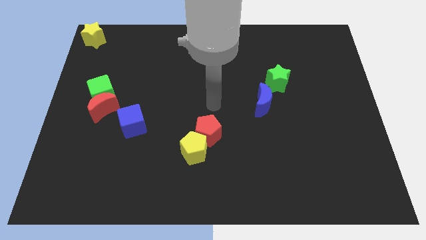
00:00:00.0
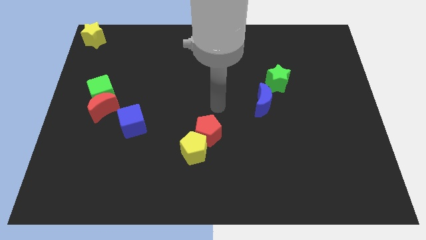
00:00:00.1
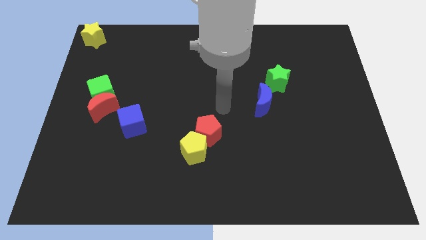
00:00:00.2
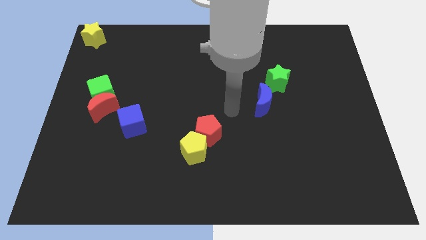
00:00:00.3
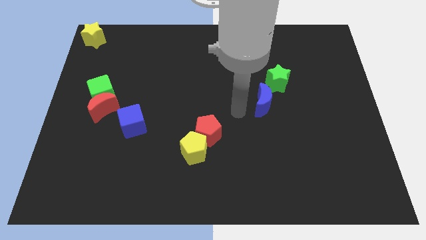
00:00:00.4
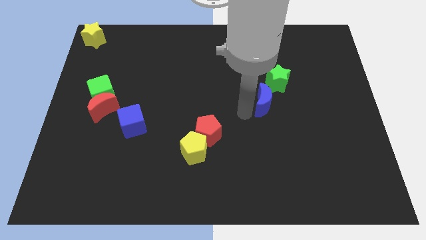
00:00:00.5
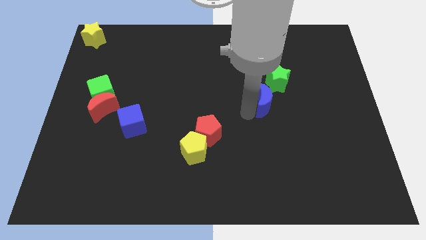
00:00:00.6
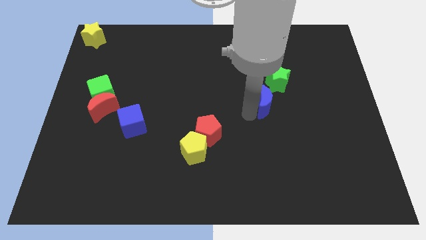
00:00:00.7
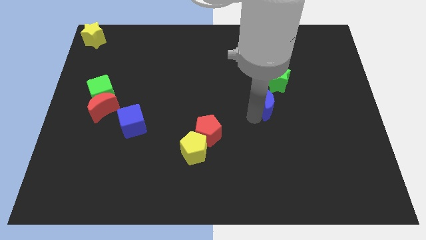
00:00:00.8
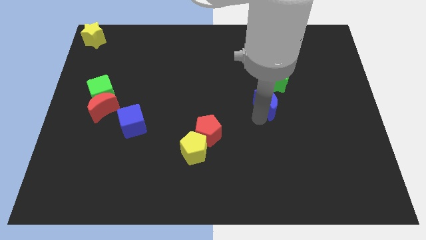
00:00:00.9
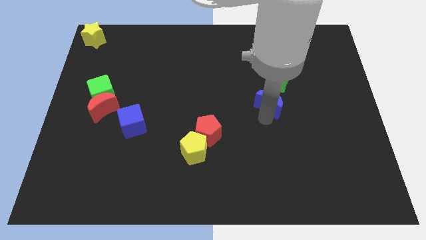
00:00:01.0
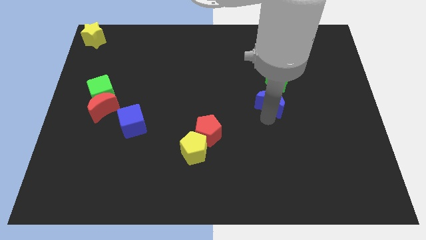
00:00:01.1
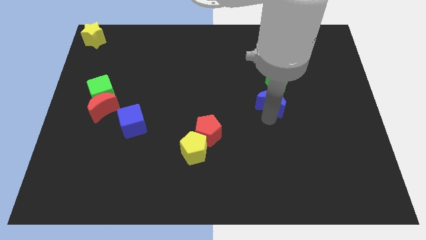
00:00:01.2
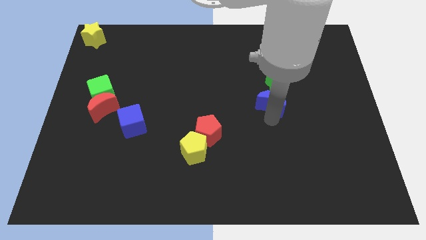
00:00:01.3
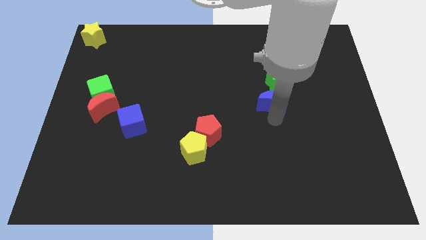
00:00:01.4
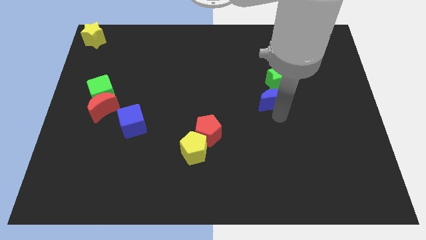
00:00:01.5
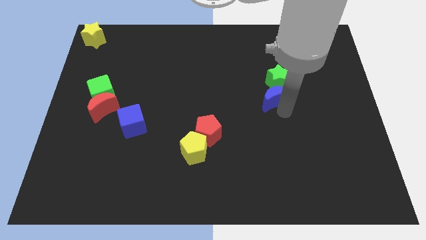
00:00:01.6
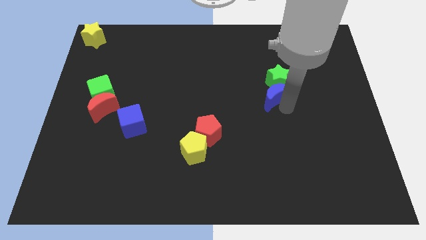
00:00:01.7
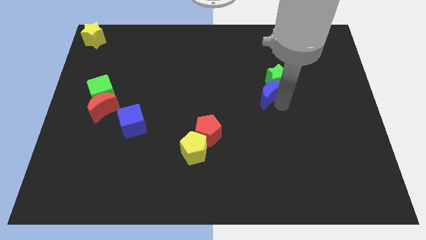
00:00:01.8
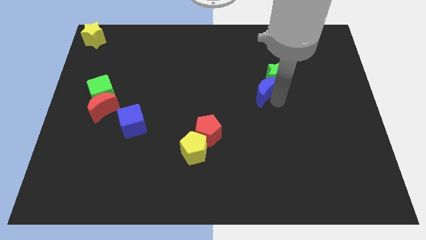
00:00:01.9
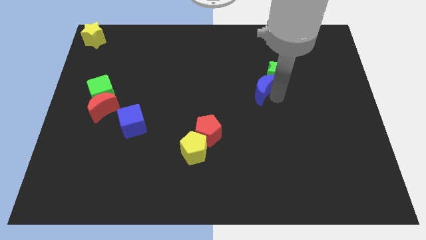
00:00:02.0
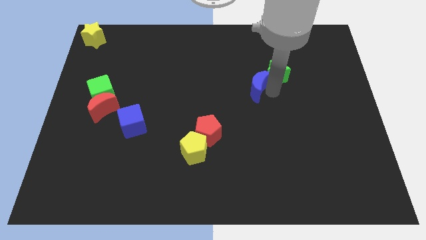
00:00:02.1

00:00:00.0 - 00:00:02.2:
move the blue crescent into the green star

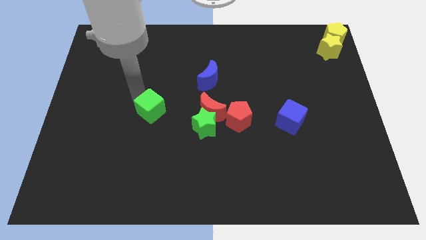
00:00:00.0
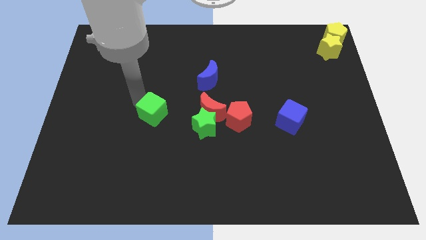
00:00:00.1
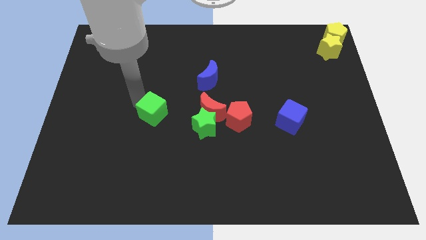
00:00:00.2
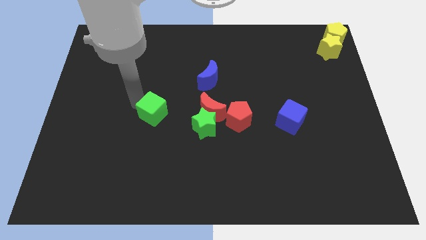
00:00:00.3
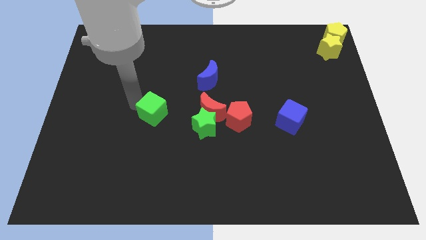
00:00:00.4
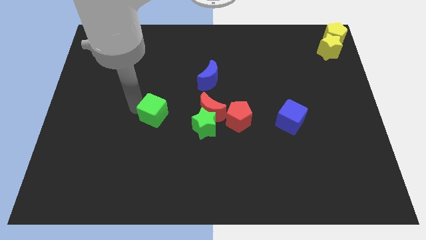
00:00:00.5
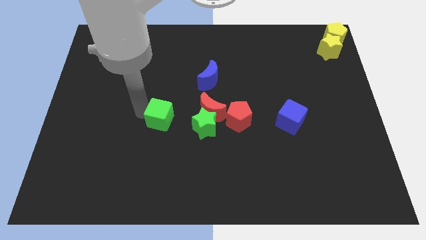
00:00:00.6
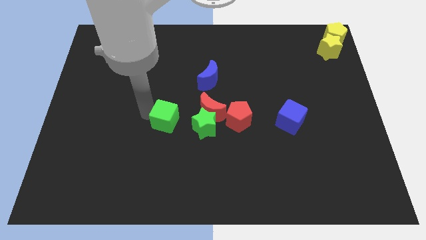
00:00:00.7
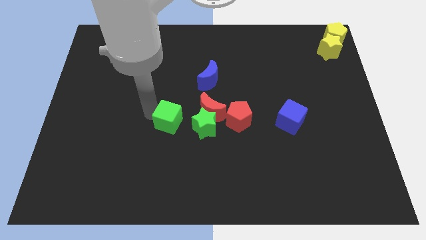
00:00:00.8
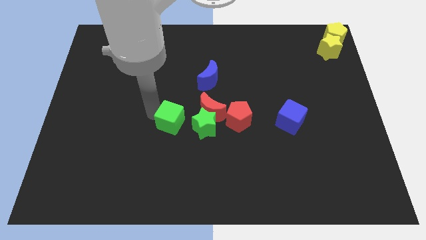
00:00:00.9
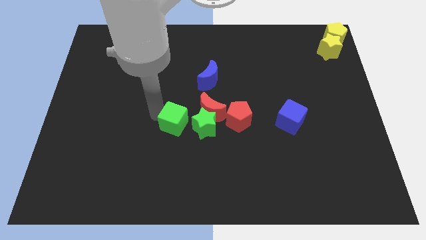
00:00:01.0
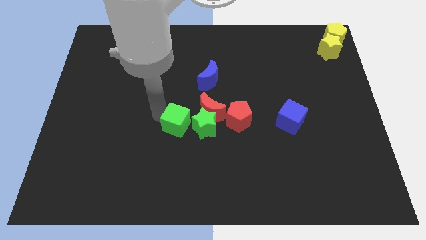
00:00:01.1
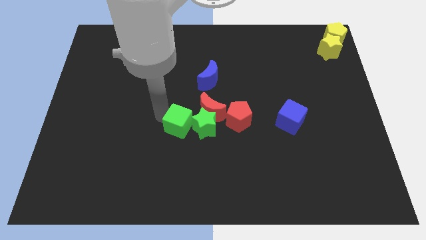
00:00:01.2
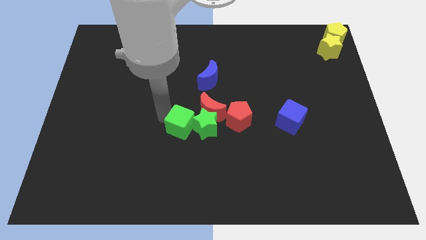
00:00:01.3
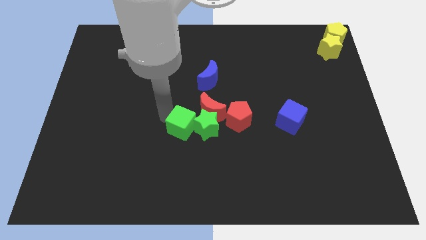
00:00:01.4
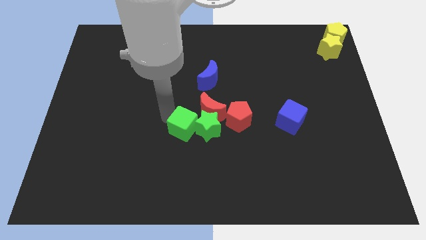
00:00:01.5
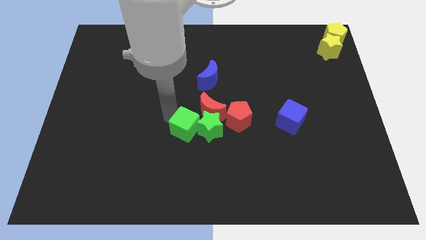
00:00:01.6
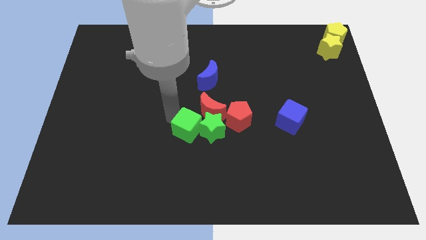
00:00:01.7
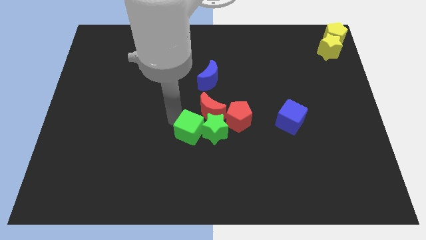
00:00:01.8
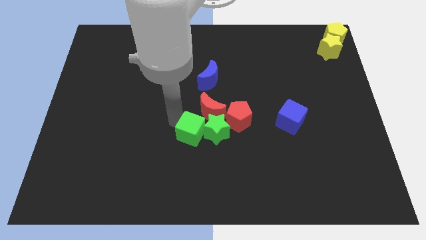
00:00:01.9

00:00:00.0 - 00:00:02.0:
put the green cube at the left side of the green star

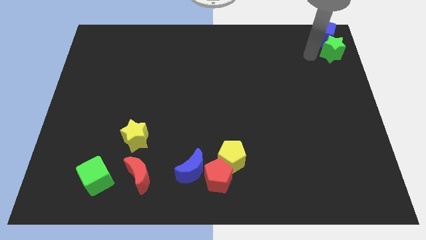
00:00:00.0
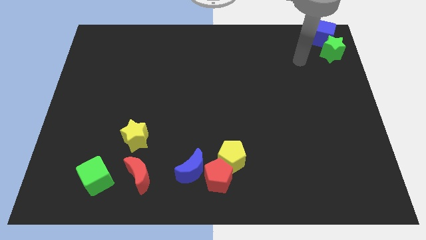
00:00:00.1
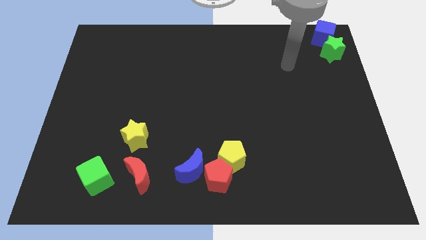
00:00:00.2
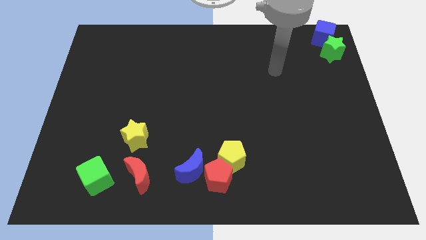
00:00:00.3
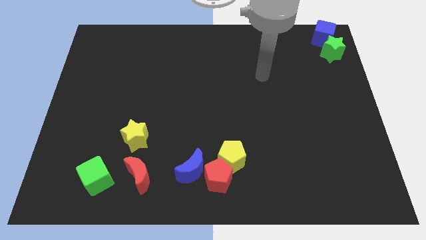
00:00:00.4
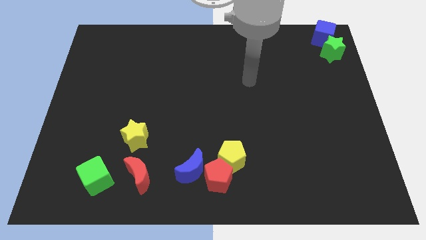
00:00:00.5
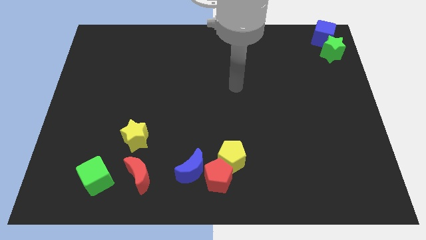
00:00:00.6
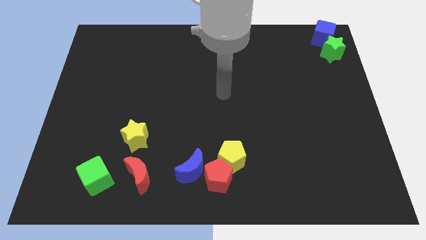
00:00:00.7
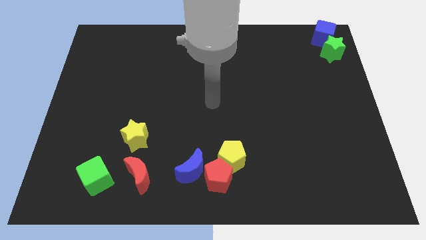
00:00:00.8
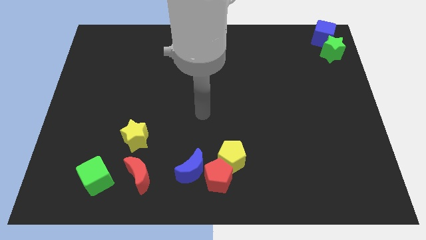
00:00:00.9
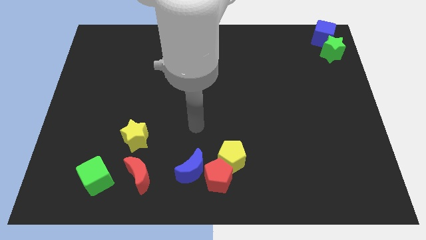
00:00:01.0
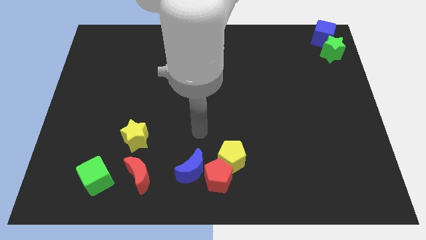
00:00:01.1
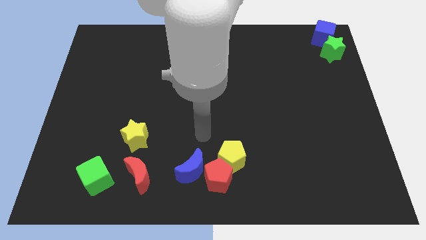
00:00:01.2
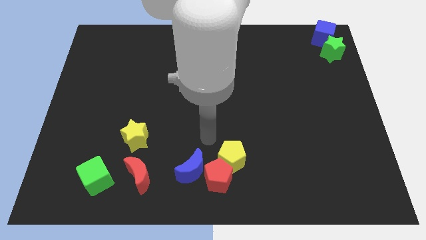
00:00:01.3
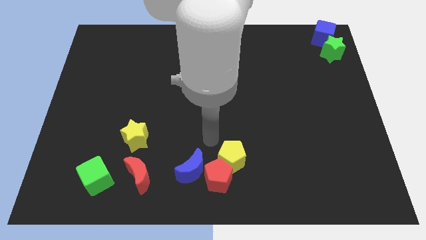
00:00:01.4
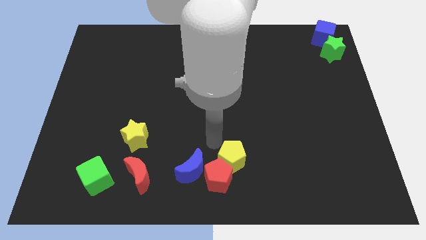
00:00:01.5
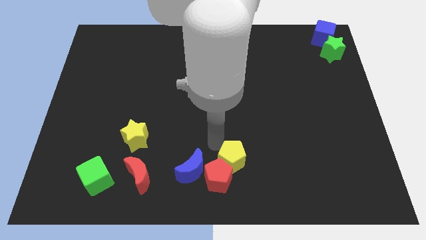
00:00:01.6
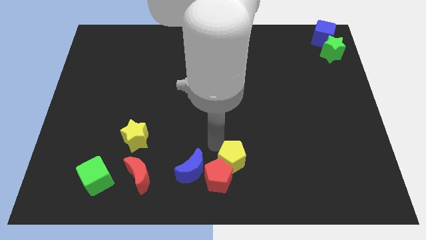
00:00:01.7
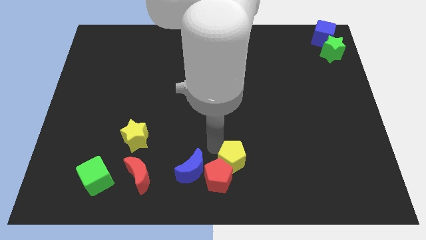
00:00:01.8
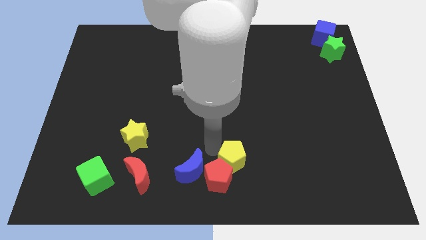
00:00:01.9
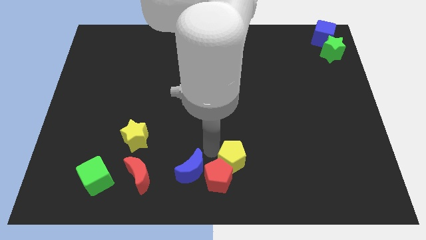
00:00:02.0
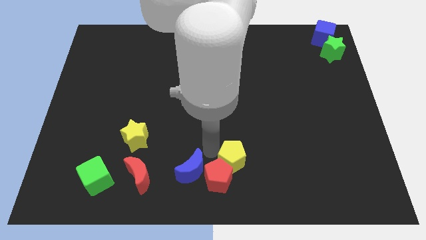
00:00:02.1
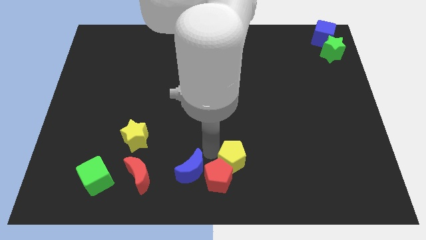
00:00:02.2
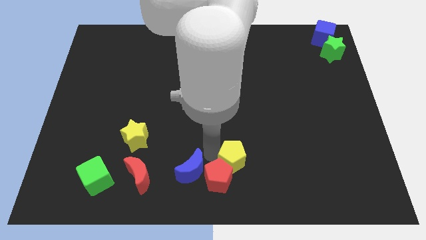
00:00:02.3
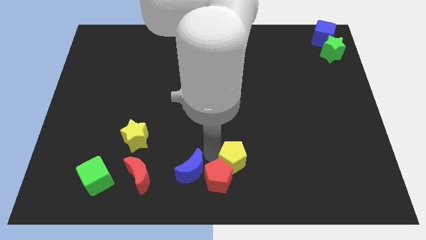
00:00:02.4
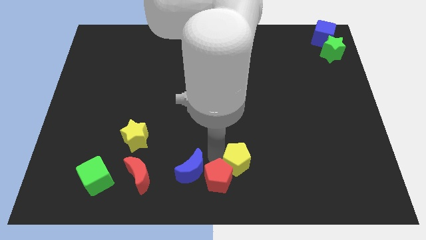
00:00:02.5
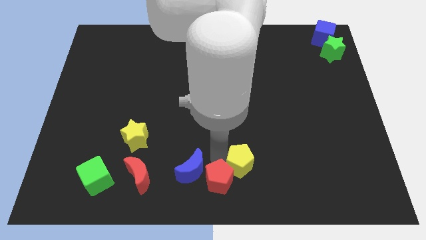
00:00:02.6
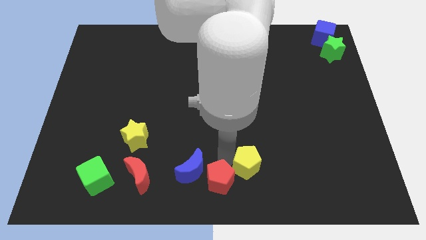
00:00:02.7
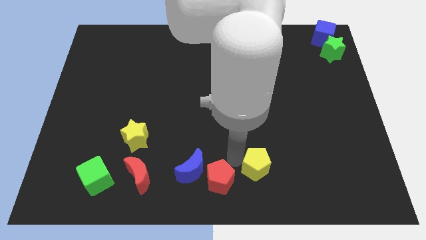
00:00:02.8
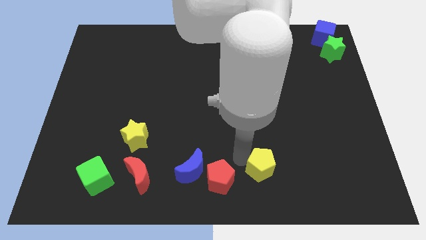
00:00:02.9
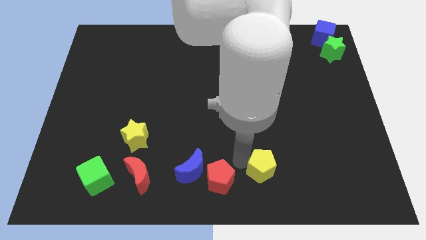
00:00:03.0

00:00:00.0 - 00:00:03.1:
push the yellow pentagon slightly to the right

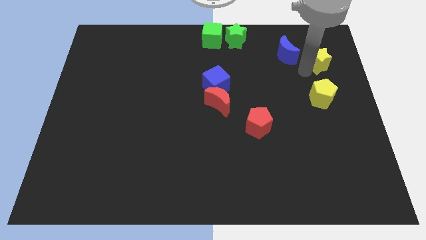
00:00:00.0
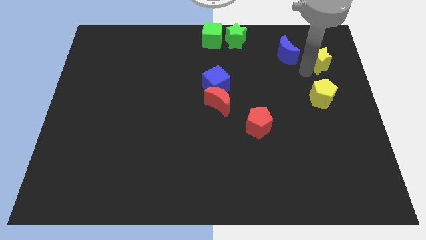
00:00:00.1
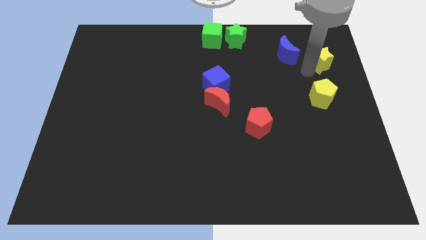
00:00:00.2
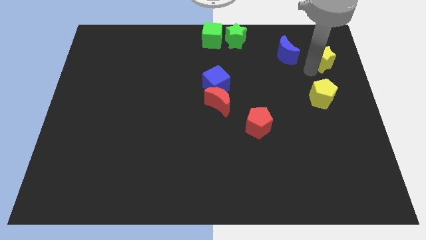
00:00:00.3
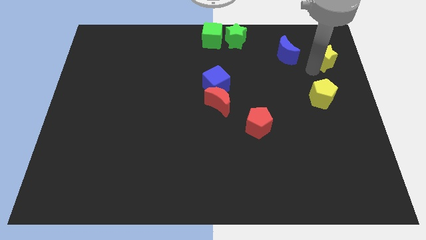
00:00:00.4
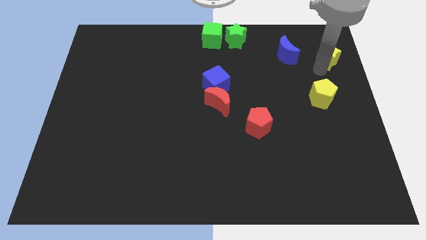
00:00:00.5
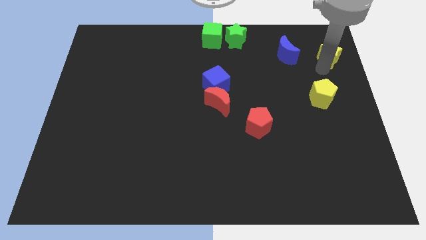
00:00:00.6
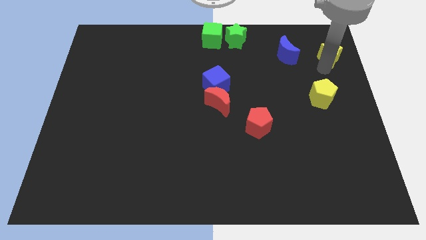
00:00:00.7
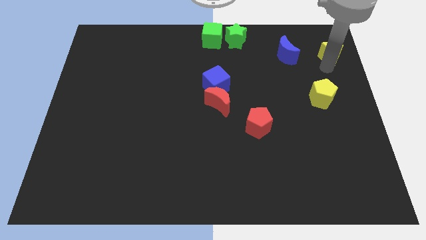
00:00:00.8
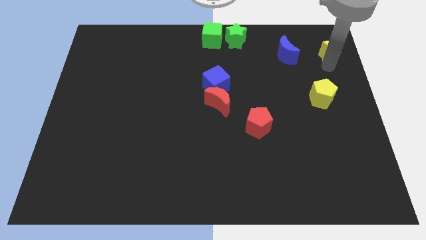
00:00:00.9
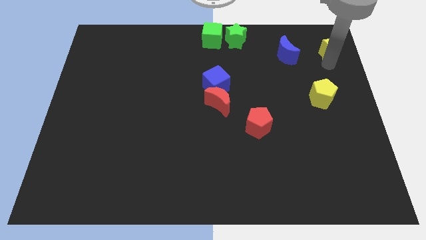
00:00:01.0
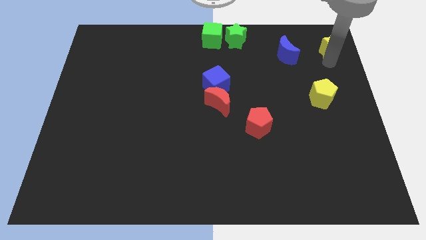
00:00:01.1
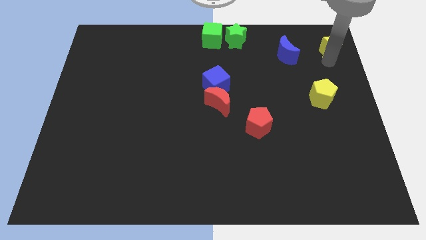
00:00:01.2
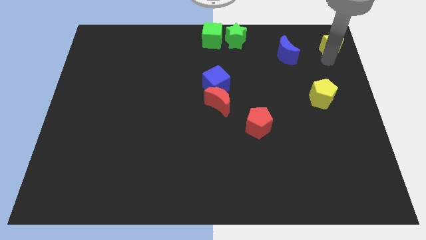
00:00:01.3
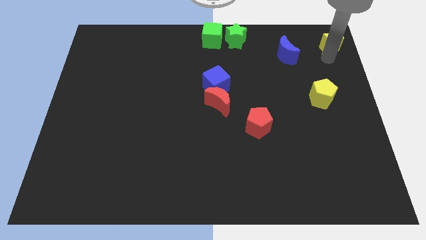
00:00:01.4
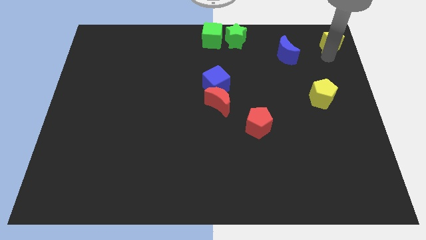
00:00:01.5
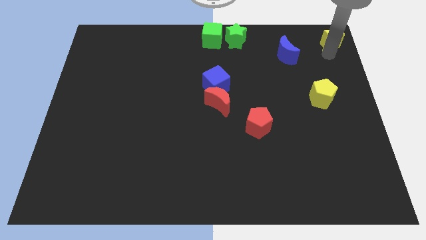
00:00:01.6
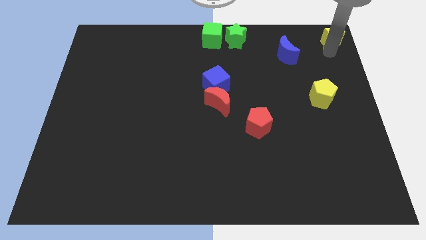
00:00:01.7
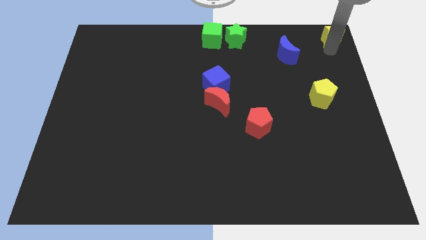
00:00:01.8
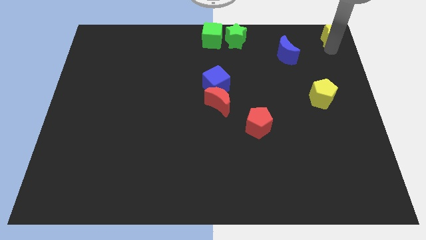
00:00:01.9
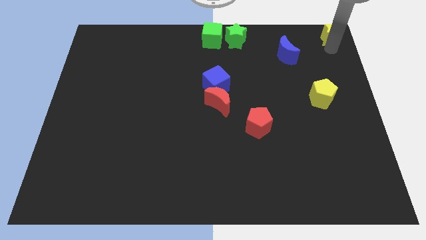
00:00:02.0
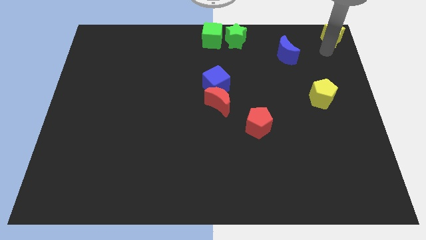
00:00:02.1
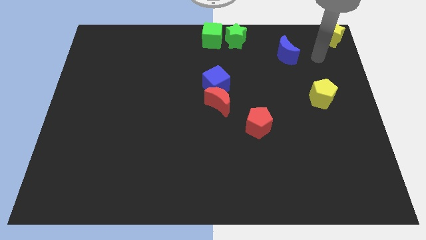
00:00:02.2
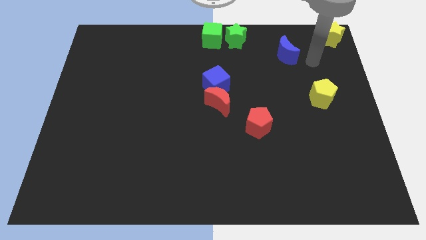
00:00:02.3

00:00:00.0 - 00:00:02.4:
move the yellow star to the top right corner
